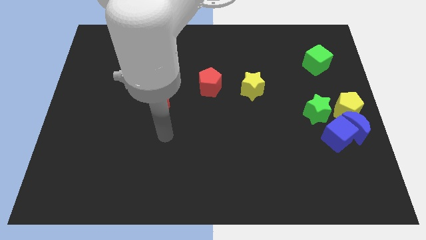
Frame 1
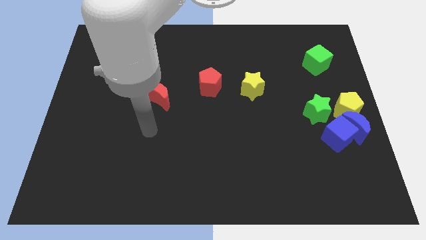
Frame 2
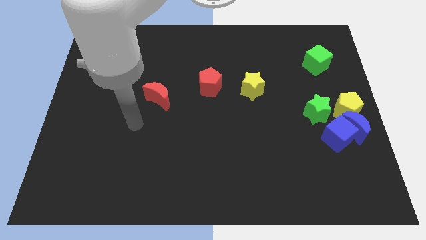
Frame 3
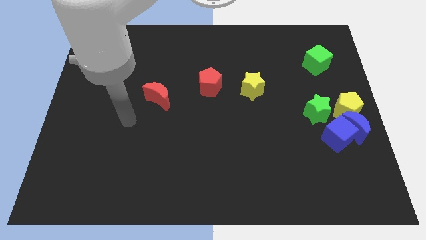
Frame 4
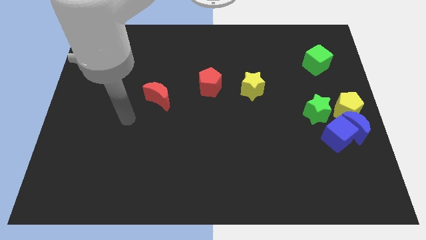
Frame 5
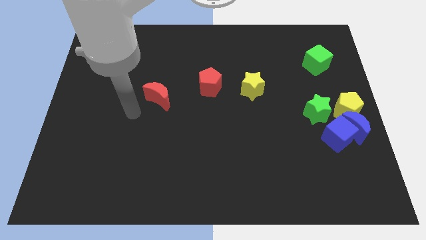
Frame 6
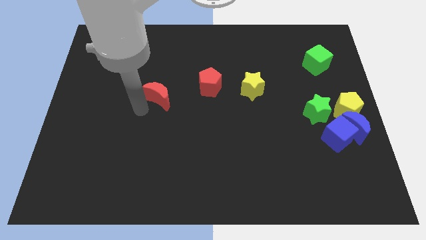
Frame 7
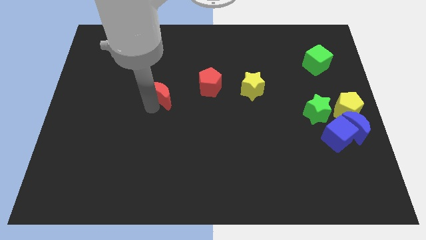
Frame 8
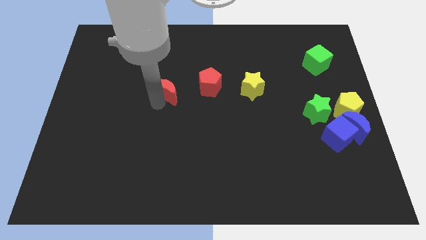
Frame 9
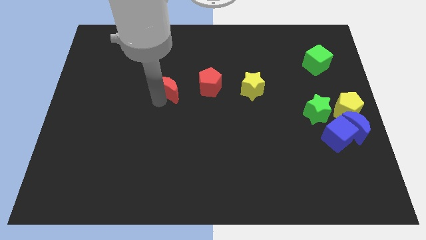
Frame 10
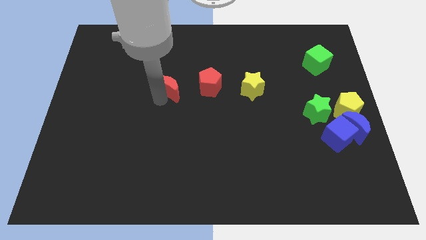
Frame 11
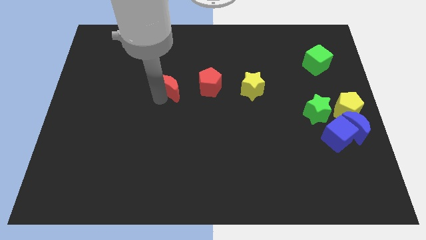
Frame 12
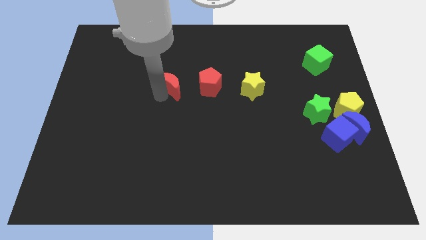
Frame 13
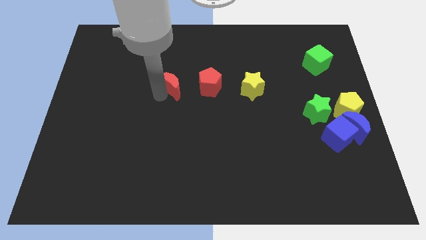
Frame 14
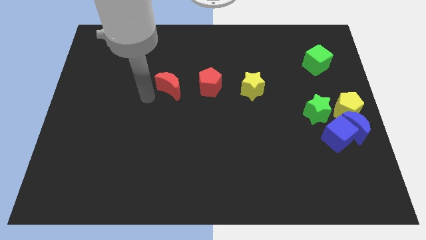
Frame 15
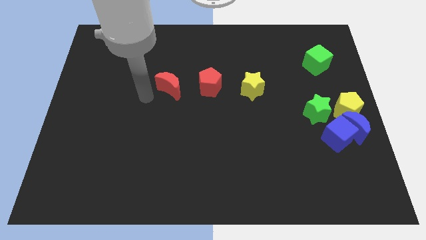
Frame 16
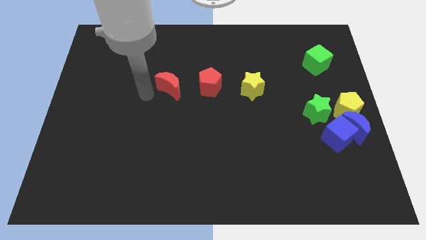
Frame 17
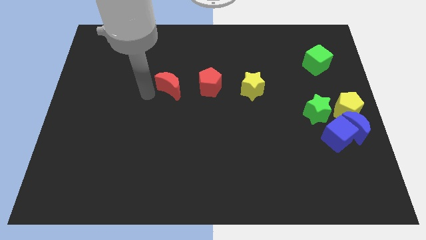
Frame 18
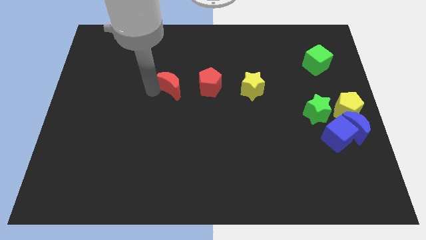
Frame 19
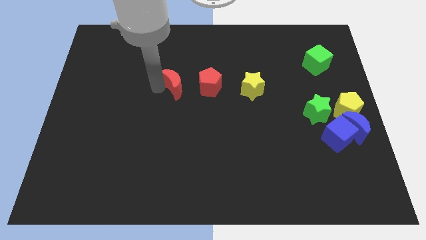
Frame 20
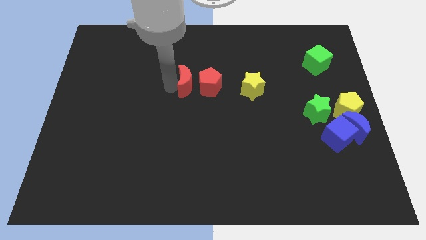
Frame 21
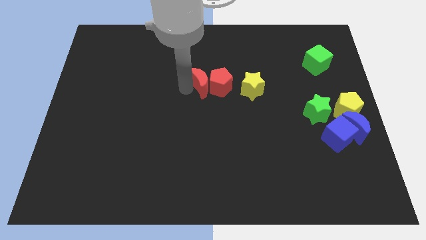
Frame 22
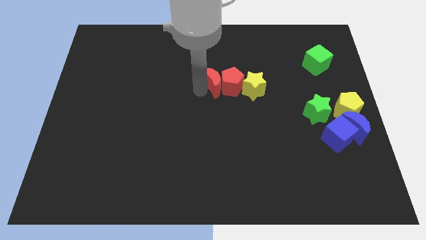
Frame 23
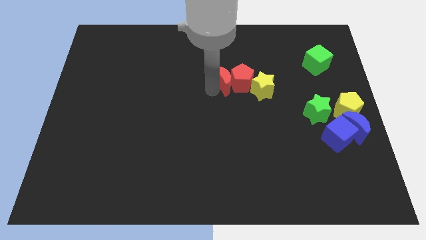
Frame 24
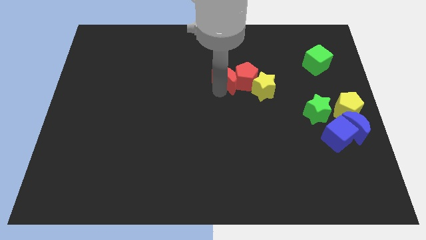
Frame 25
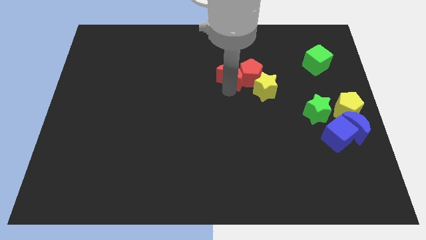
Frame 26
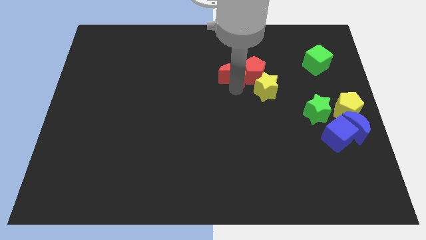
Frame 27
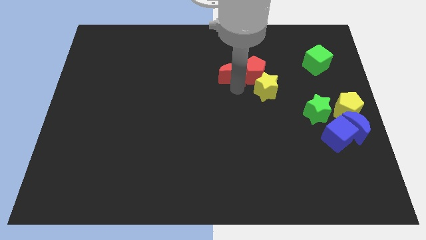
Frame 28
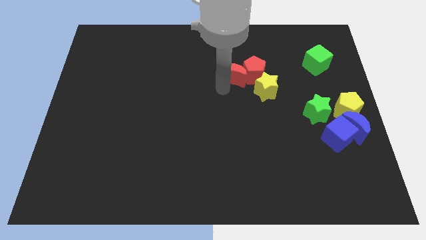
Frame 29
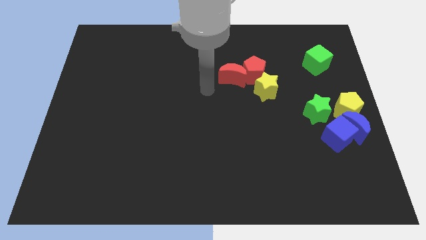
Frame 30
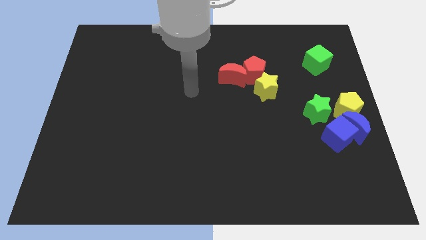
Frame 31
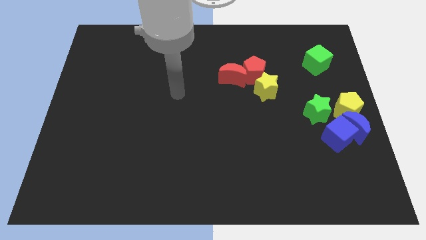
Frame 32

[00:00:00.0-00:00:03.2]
push the red pentagon on top of the yellow star using red crescent

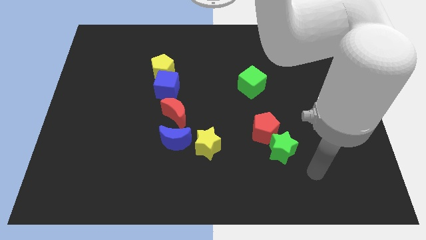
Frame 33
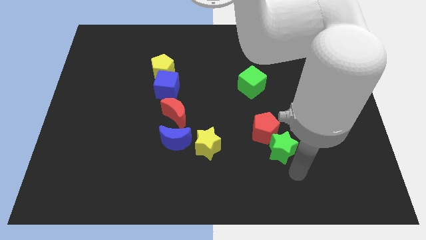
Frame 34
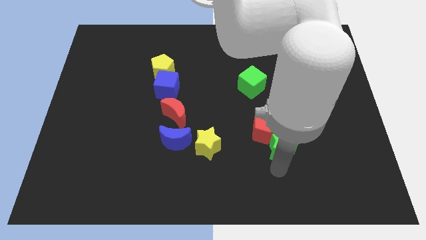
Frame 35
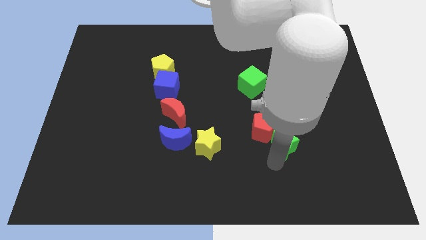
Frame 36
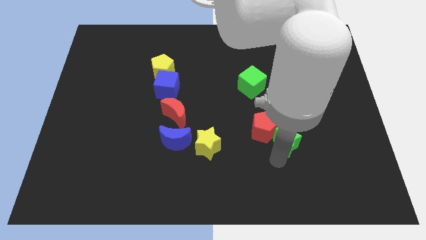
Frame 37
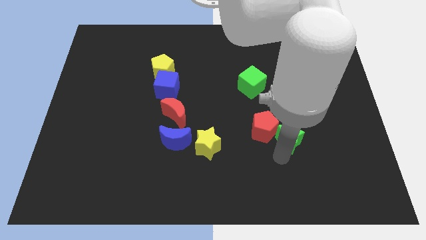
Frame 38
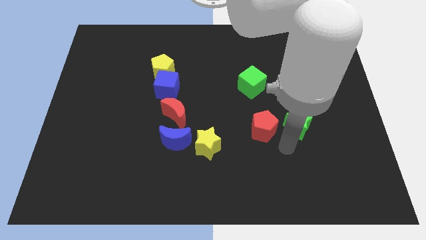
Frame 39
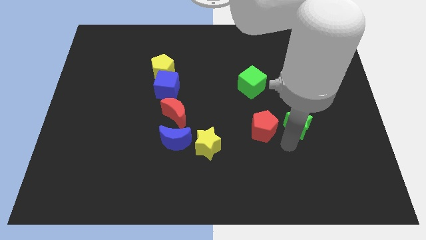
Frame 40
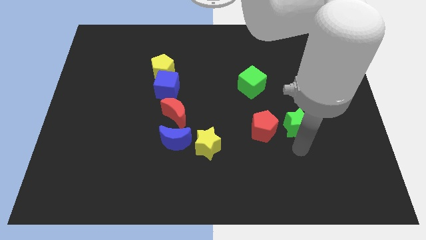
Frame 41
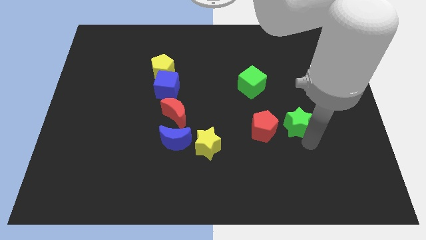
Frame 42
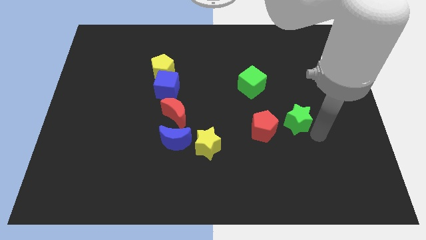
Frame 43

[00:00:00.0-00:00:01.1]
separate the green star from the red pentagon

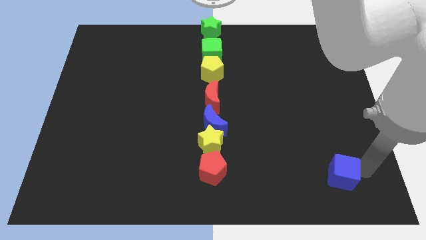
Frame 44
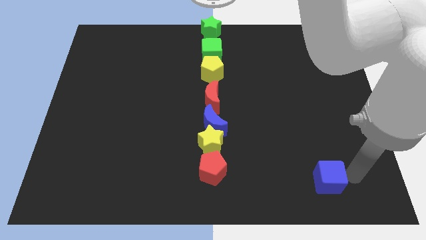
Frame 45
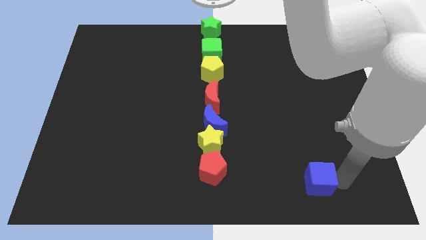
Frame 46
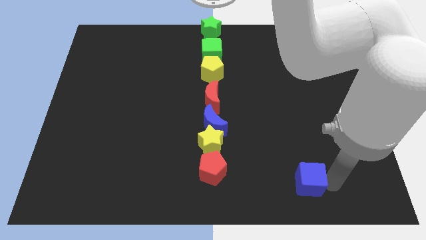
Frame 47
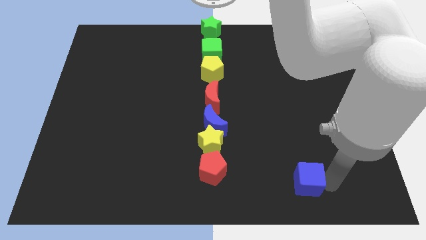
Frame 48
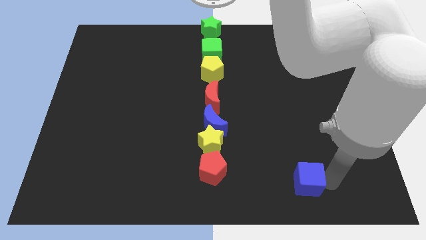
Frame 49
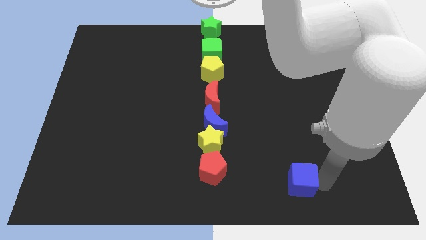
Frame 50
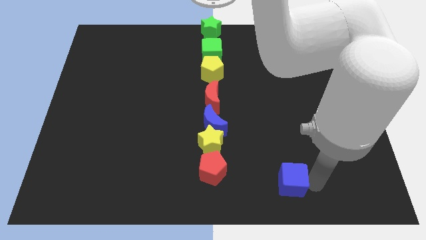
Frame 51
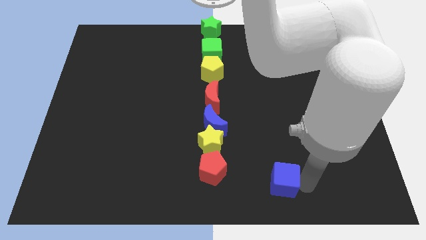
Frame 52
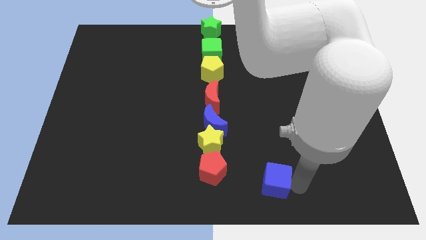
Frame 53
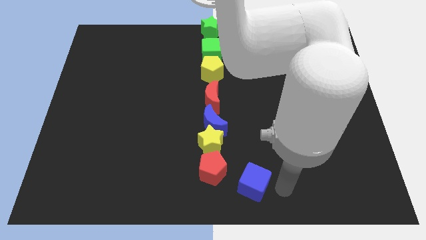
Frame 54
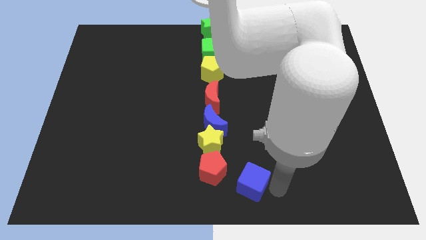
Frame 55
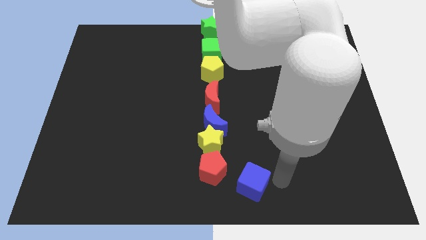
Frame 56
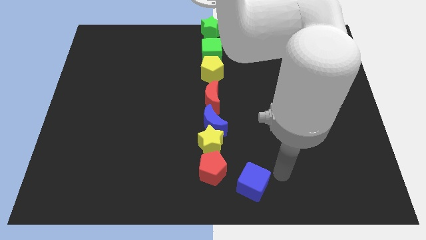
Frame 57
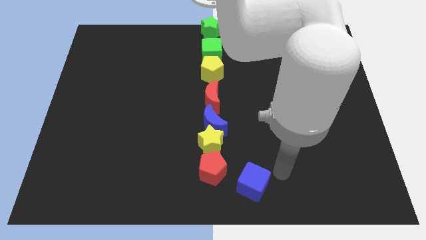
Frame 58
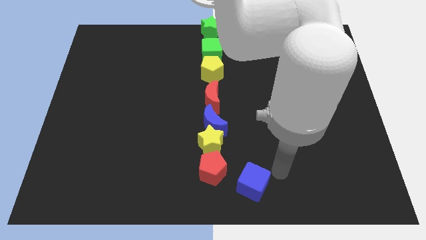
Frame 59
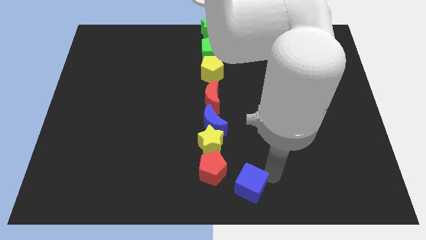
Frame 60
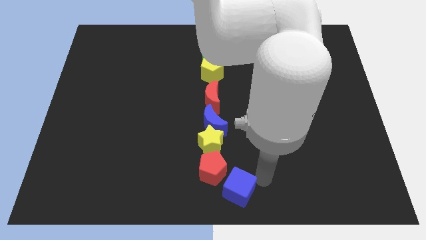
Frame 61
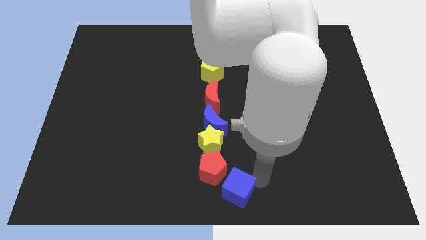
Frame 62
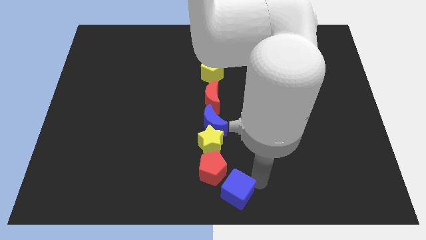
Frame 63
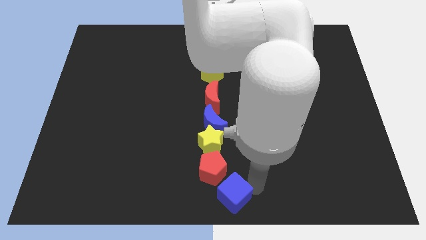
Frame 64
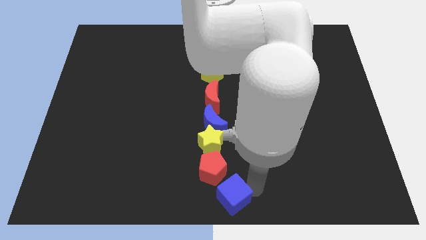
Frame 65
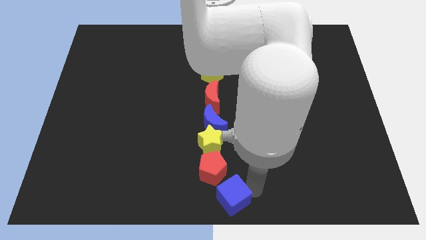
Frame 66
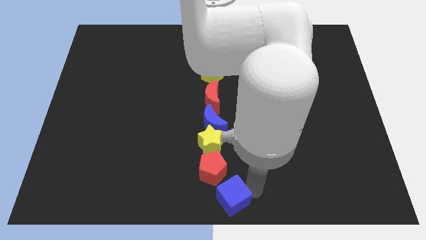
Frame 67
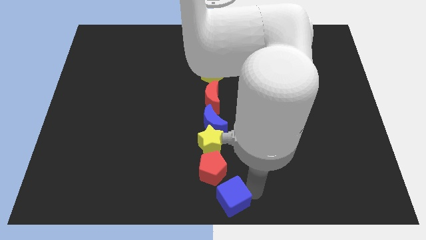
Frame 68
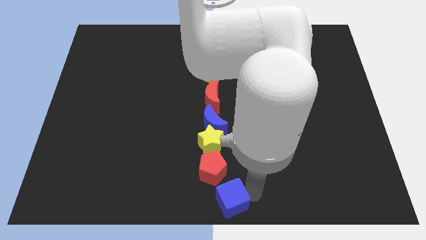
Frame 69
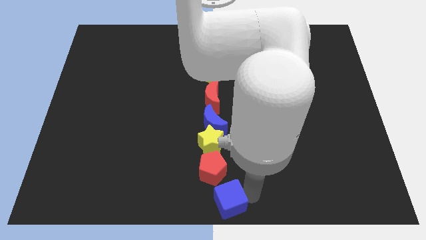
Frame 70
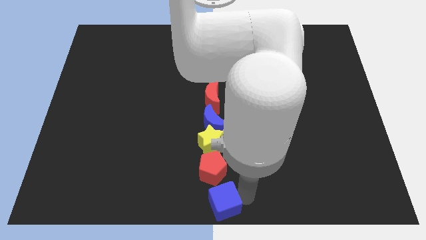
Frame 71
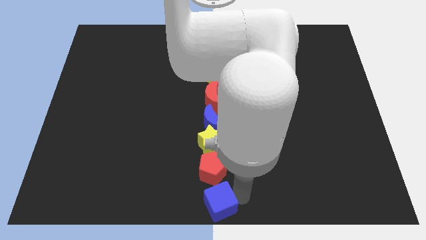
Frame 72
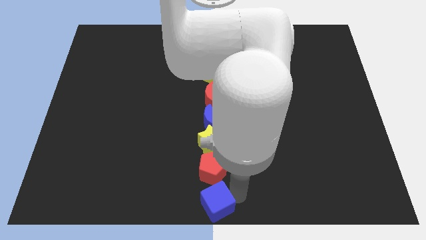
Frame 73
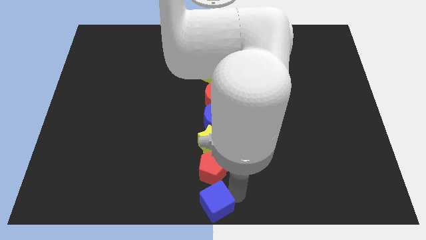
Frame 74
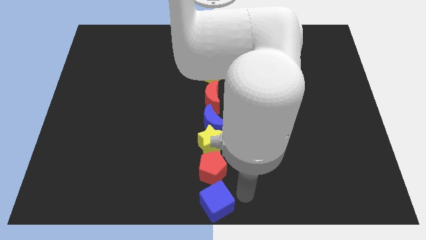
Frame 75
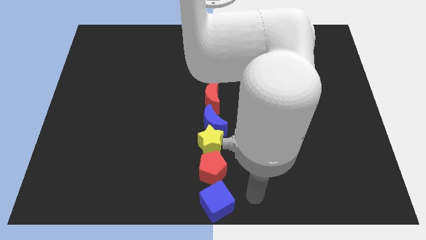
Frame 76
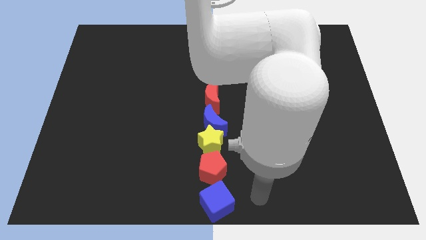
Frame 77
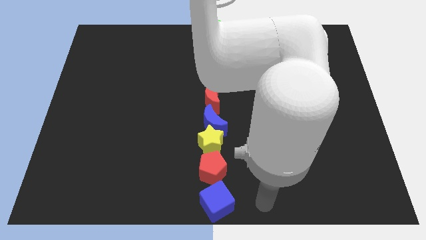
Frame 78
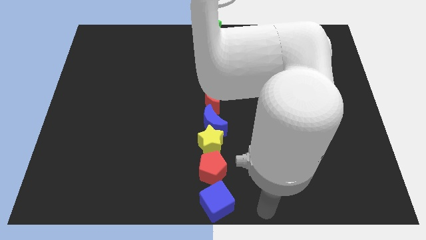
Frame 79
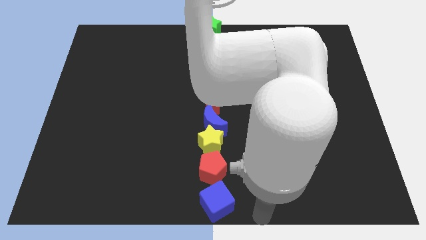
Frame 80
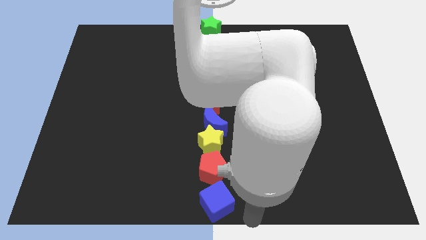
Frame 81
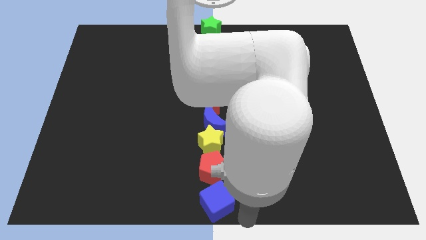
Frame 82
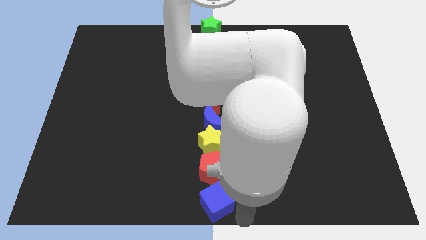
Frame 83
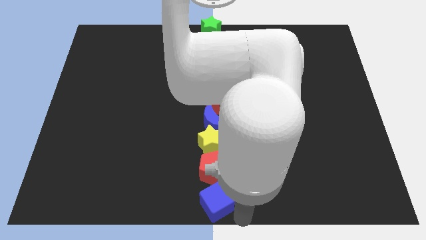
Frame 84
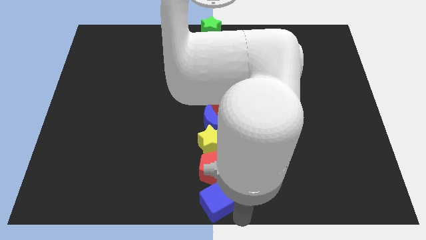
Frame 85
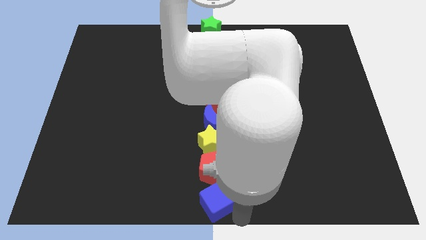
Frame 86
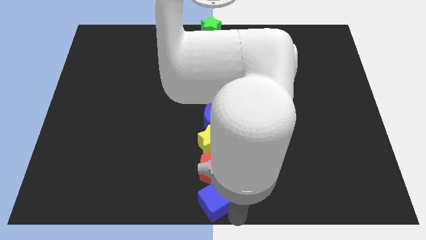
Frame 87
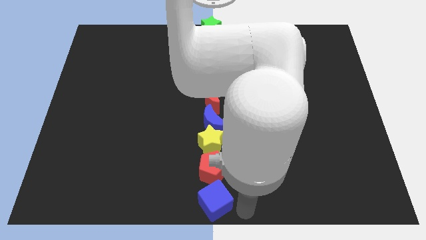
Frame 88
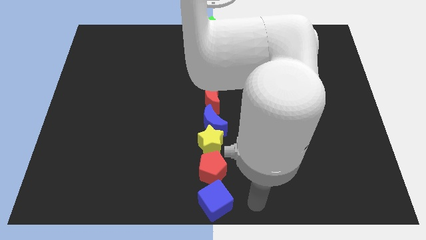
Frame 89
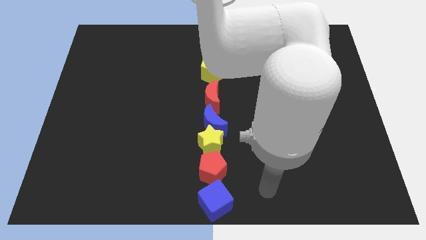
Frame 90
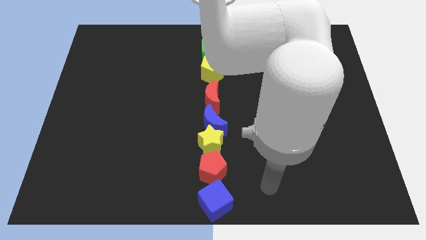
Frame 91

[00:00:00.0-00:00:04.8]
move the blue cube below the red pentagon to make a vertical line of all the blocks
